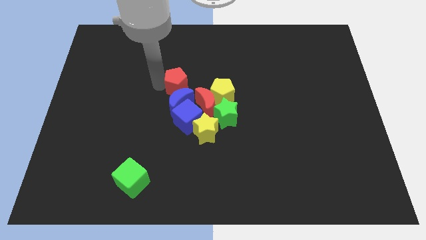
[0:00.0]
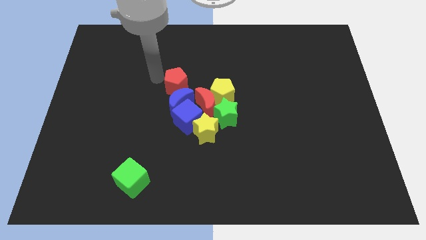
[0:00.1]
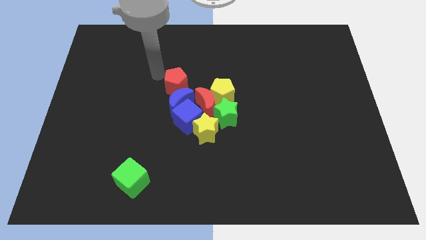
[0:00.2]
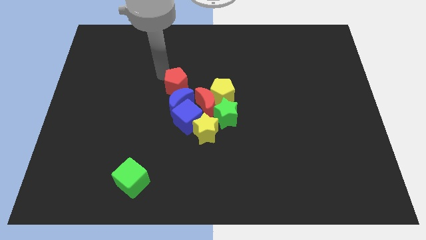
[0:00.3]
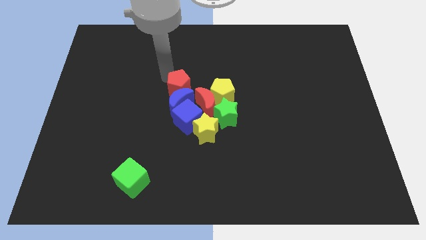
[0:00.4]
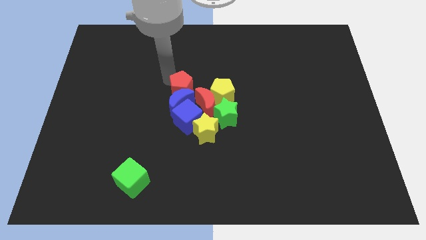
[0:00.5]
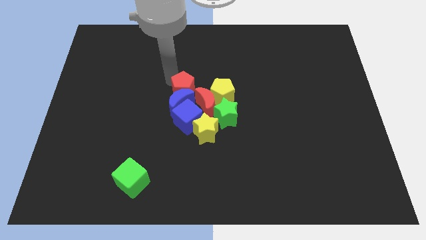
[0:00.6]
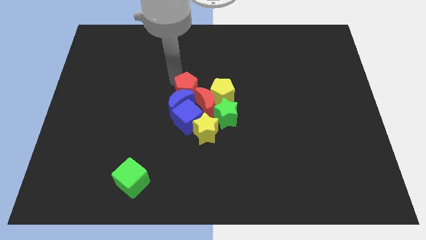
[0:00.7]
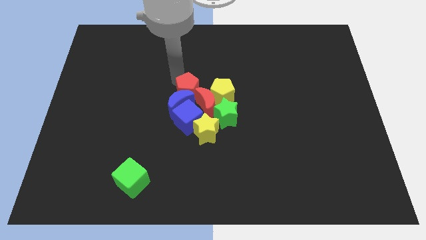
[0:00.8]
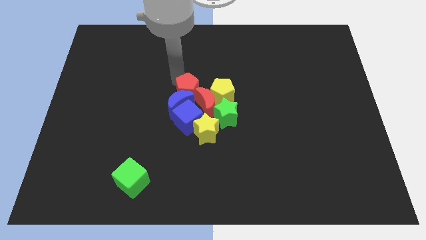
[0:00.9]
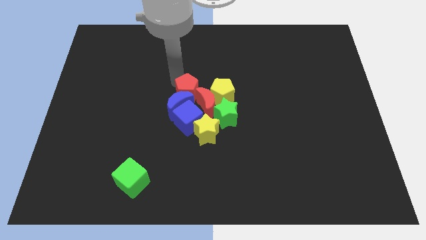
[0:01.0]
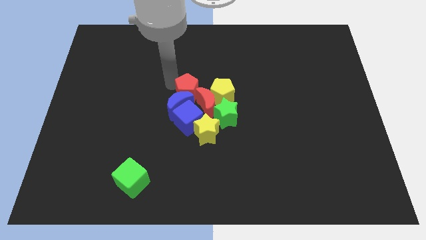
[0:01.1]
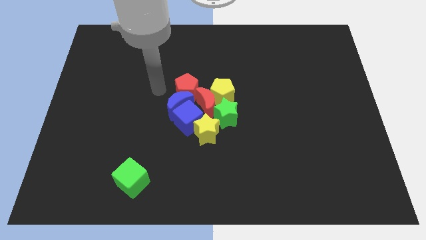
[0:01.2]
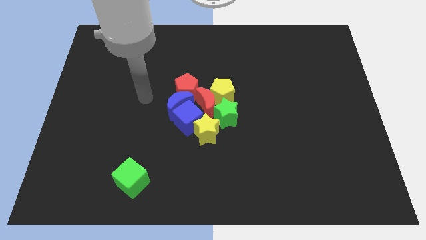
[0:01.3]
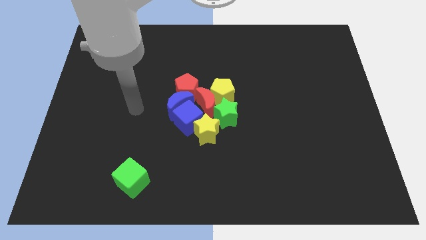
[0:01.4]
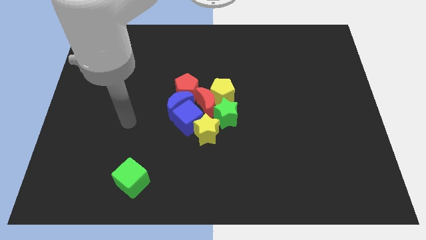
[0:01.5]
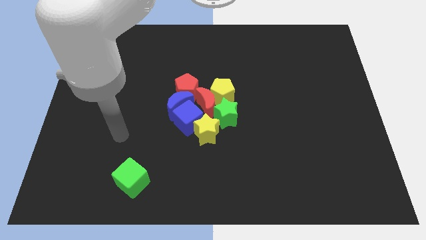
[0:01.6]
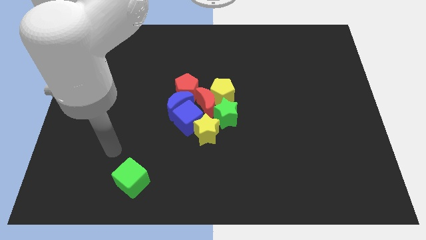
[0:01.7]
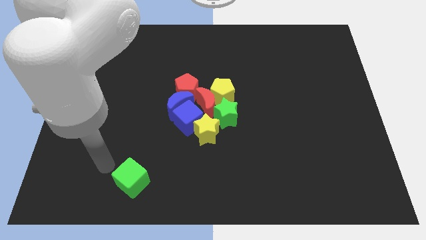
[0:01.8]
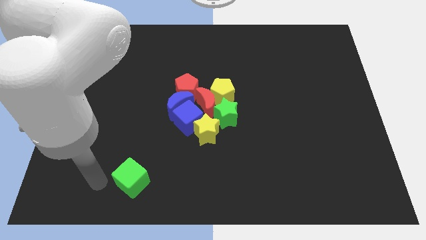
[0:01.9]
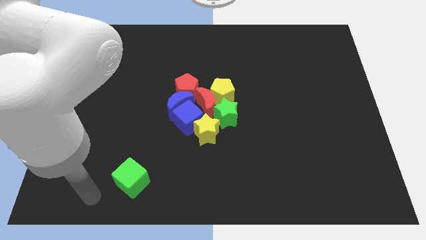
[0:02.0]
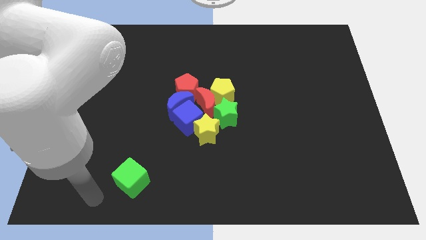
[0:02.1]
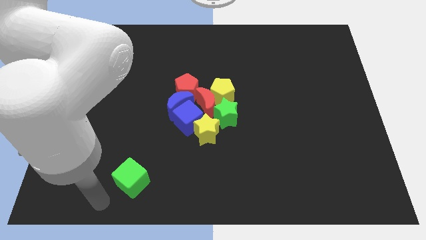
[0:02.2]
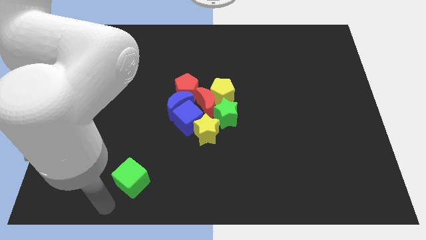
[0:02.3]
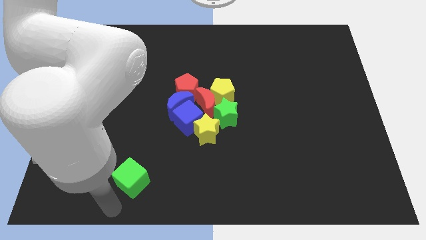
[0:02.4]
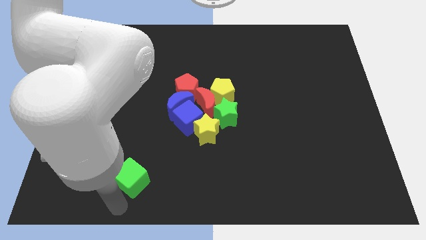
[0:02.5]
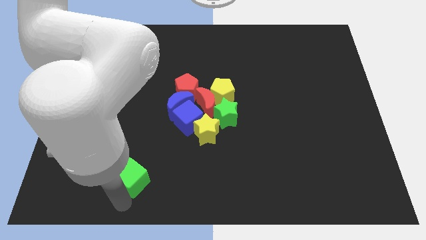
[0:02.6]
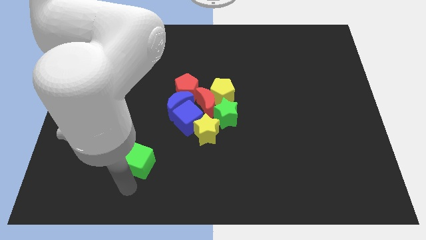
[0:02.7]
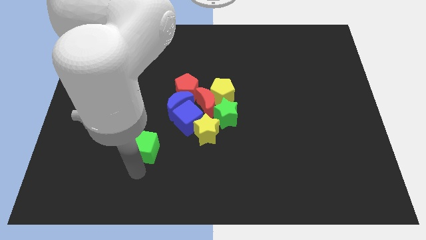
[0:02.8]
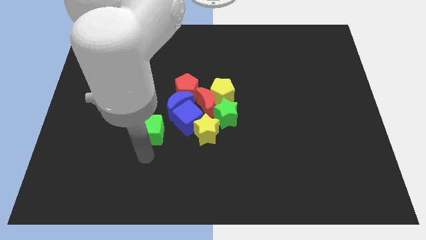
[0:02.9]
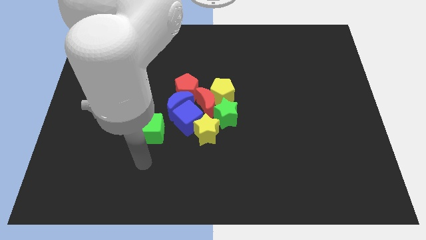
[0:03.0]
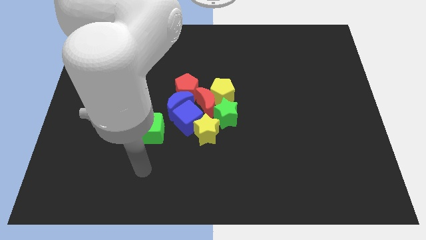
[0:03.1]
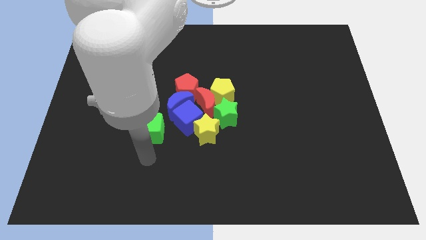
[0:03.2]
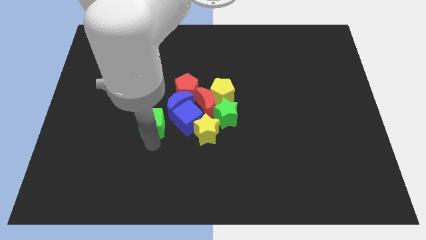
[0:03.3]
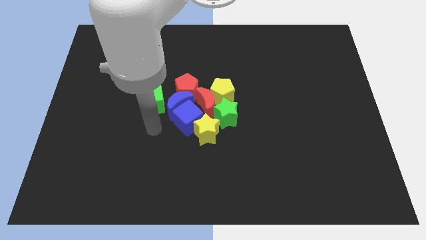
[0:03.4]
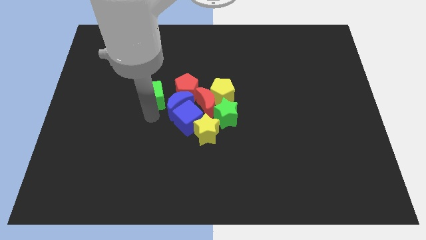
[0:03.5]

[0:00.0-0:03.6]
push green cube upwards

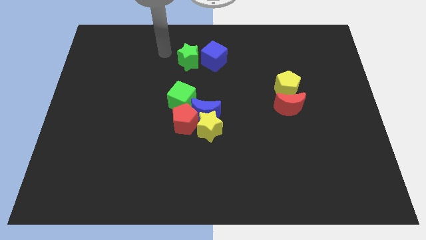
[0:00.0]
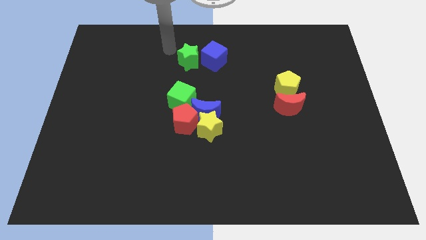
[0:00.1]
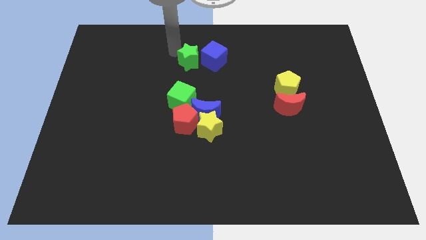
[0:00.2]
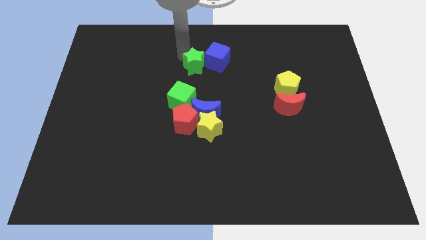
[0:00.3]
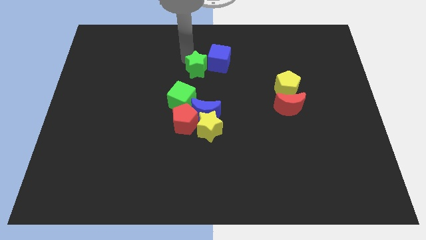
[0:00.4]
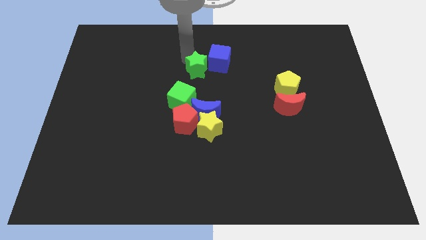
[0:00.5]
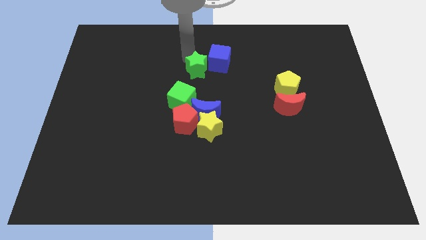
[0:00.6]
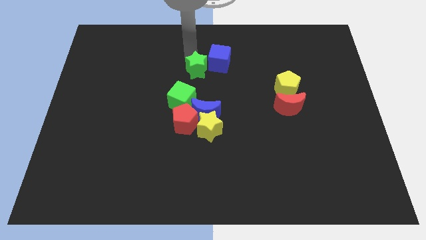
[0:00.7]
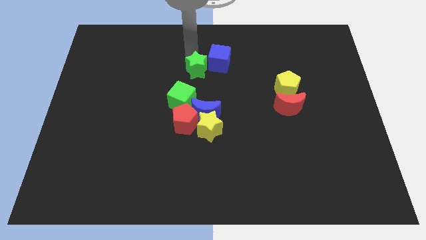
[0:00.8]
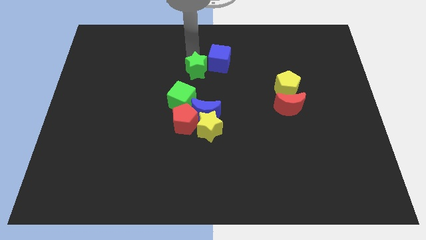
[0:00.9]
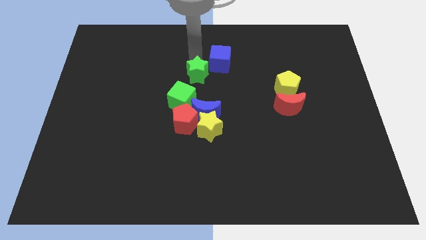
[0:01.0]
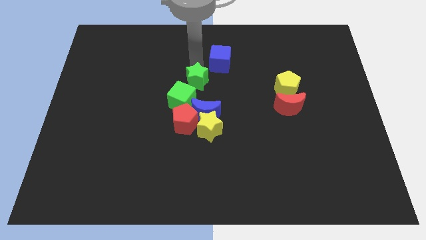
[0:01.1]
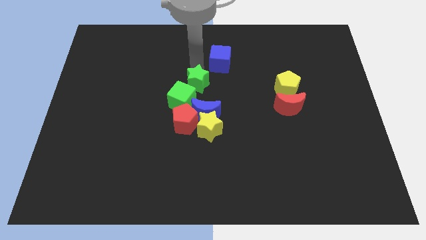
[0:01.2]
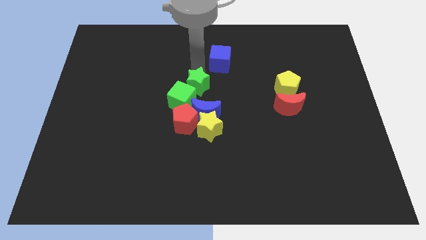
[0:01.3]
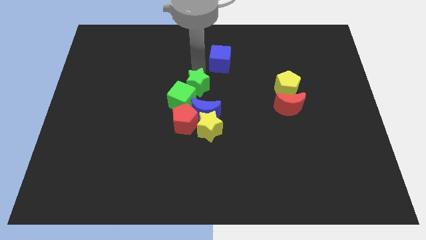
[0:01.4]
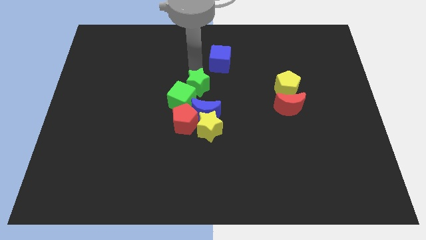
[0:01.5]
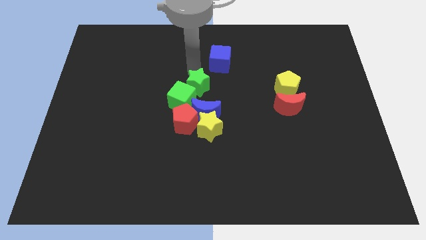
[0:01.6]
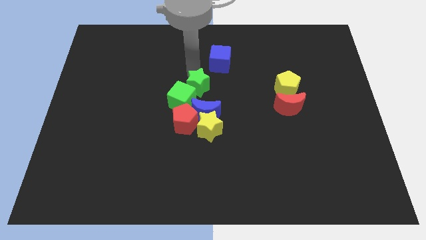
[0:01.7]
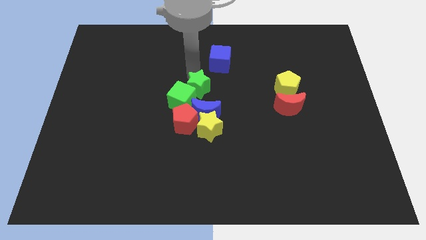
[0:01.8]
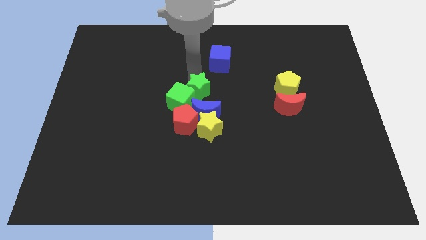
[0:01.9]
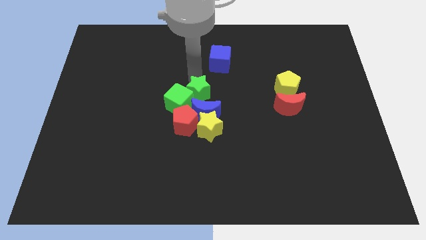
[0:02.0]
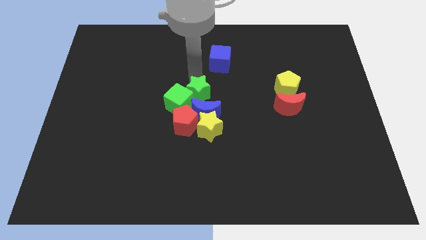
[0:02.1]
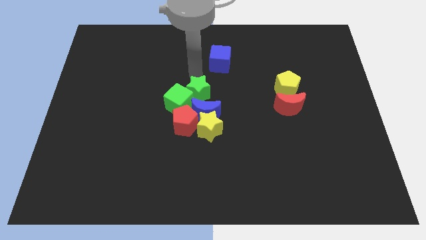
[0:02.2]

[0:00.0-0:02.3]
move the green star into the top of the blue moon

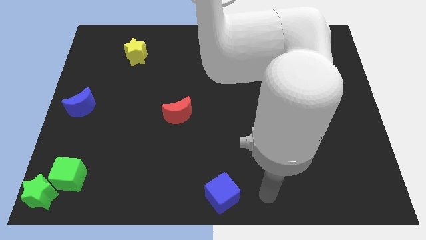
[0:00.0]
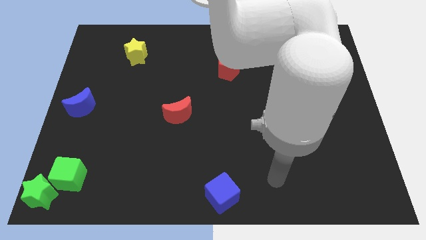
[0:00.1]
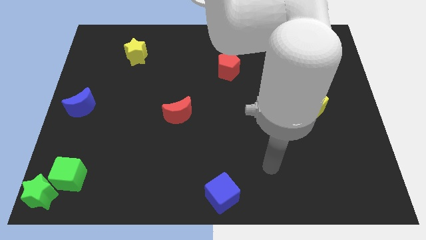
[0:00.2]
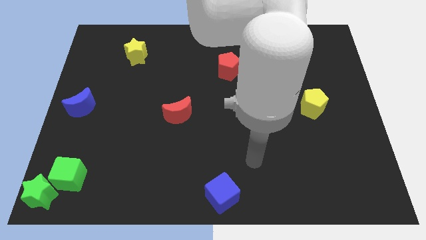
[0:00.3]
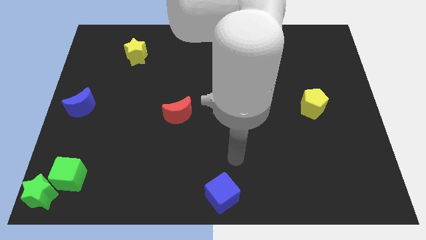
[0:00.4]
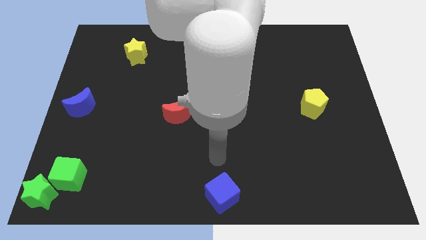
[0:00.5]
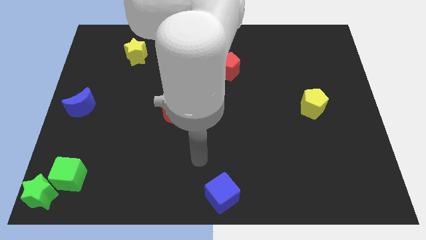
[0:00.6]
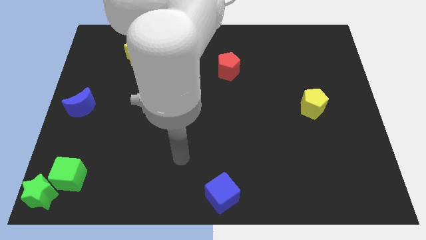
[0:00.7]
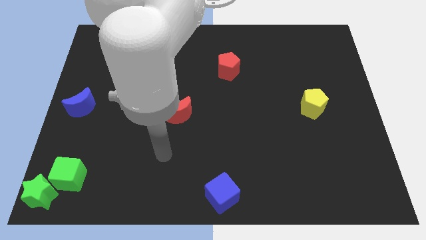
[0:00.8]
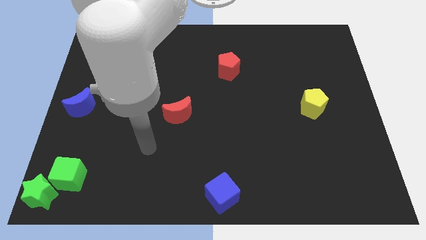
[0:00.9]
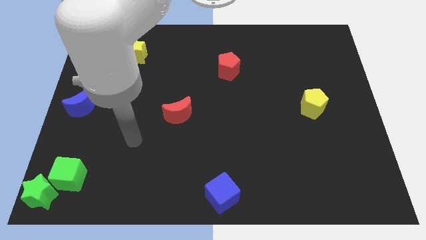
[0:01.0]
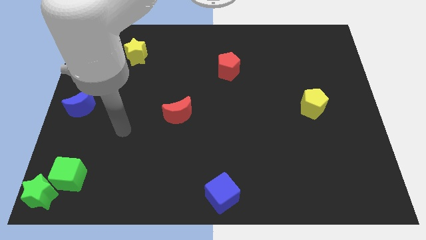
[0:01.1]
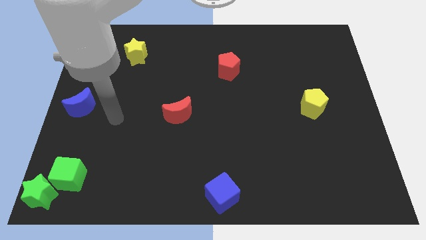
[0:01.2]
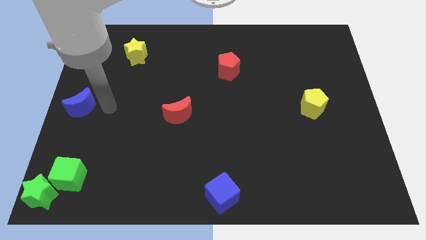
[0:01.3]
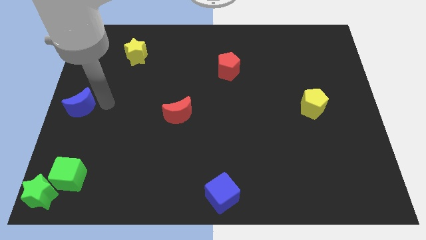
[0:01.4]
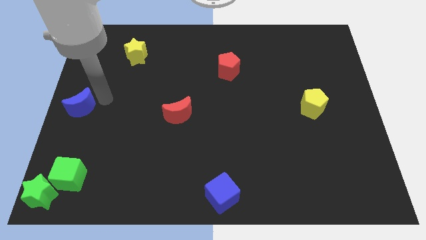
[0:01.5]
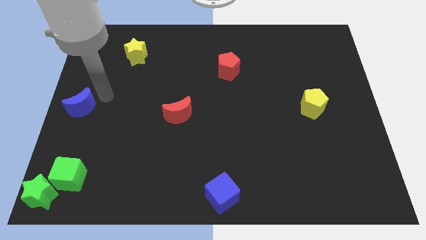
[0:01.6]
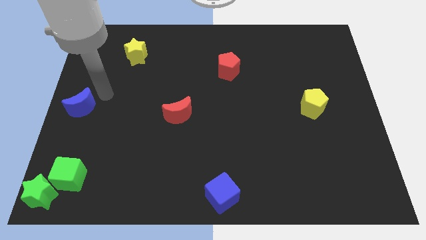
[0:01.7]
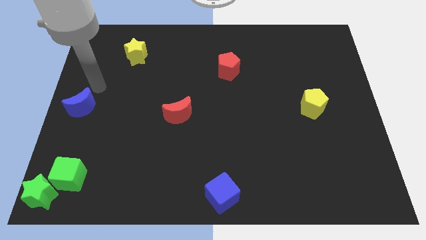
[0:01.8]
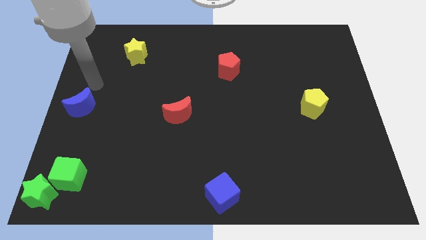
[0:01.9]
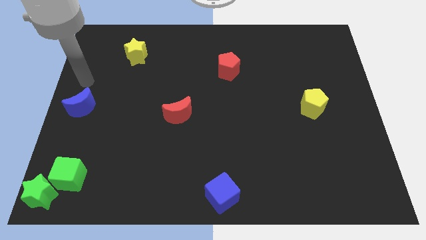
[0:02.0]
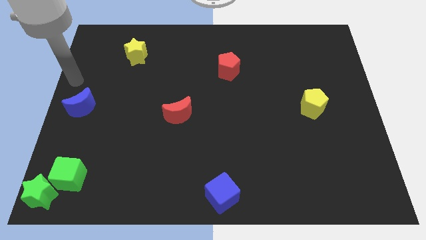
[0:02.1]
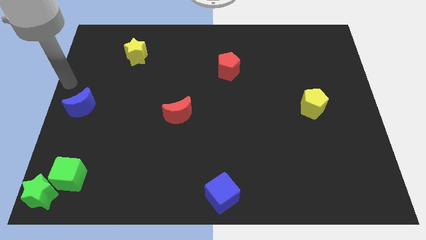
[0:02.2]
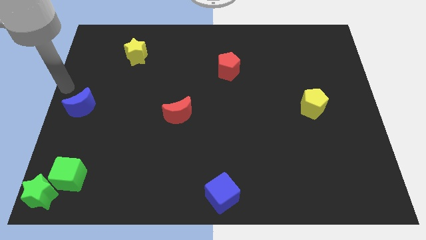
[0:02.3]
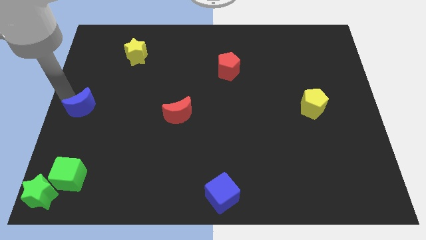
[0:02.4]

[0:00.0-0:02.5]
point your arm diagonal above the blue moon

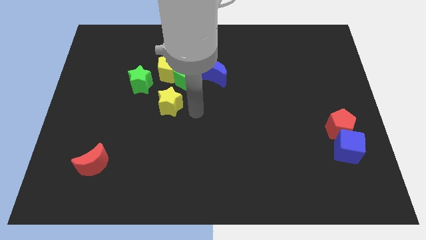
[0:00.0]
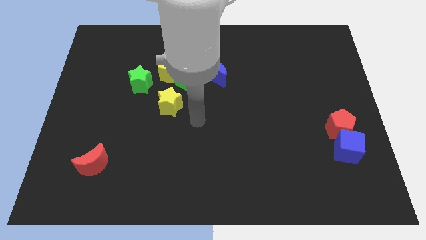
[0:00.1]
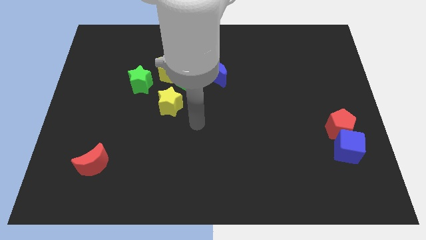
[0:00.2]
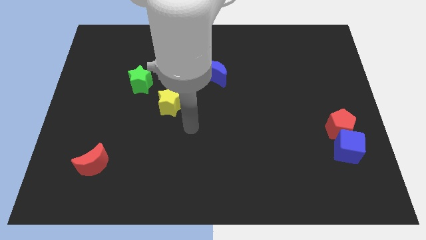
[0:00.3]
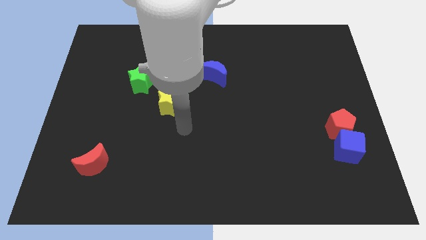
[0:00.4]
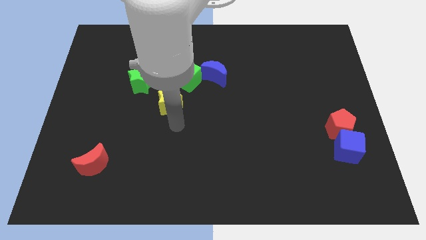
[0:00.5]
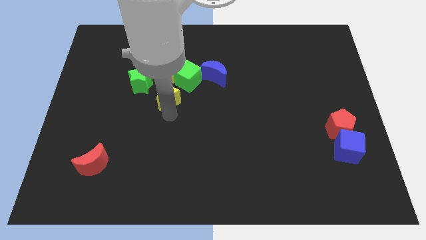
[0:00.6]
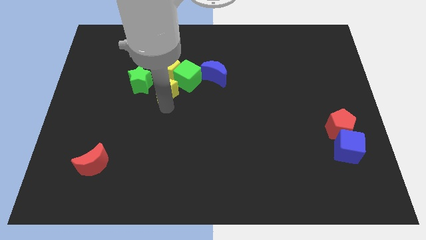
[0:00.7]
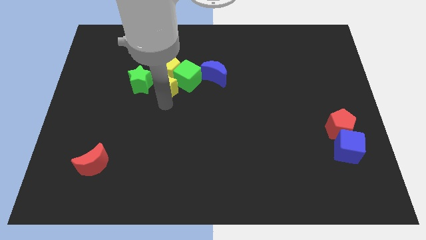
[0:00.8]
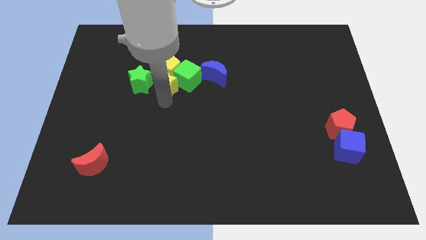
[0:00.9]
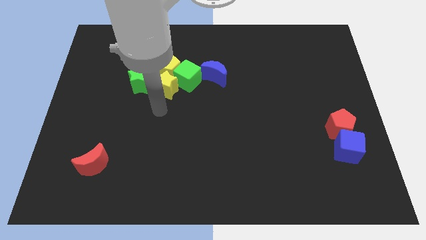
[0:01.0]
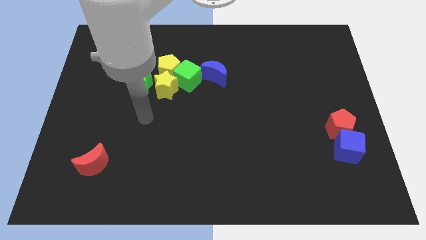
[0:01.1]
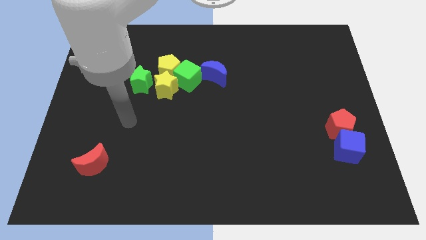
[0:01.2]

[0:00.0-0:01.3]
place the yellow star at the bottom of the yellow pentagon
